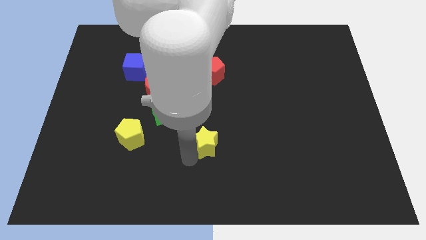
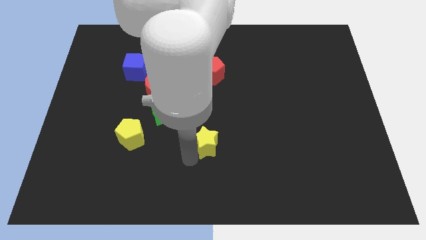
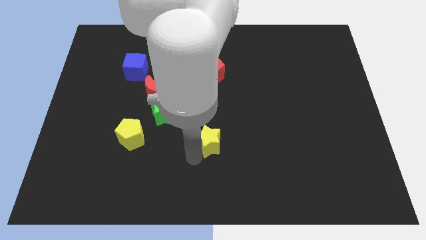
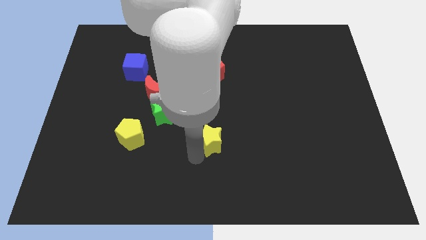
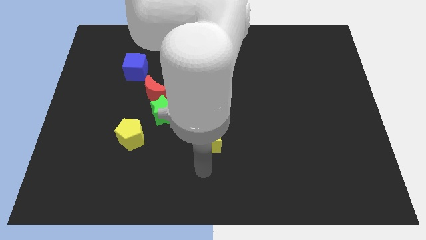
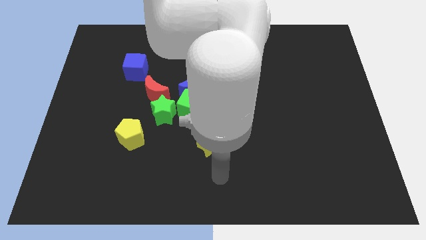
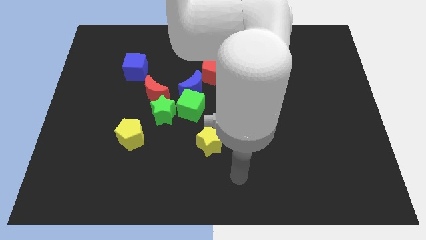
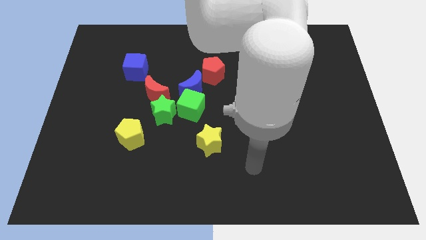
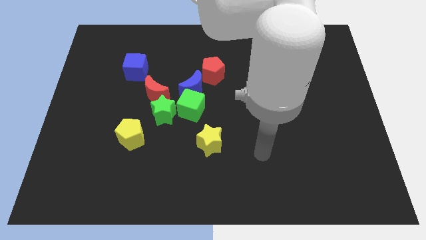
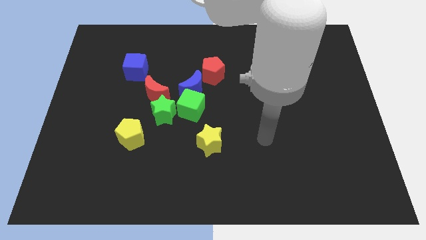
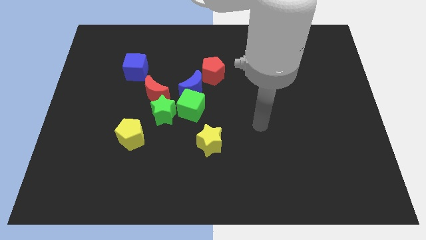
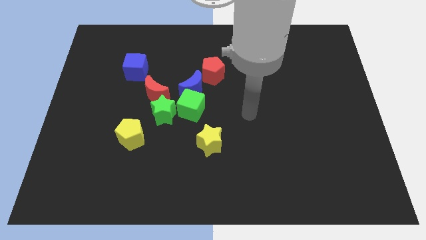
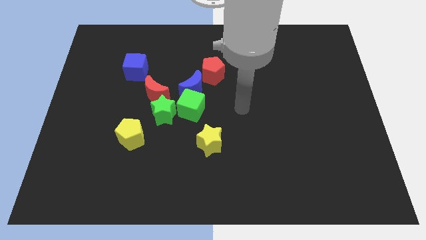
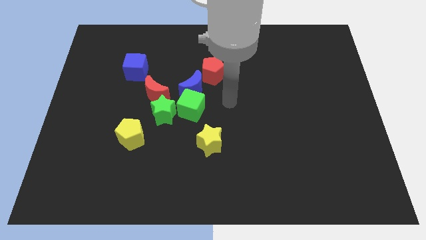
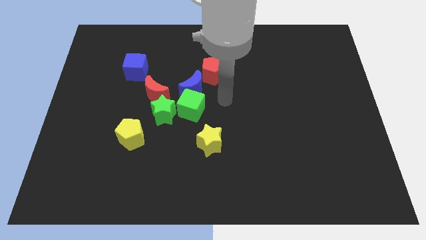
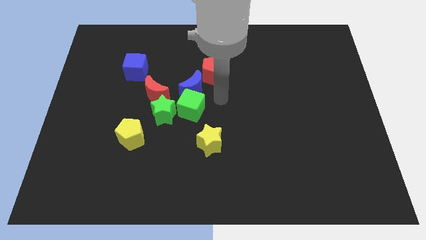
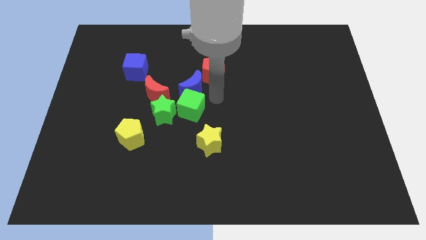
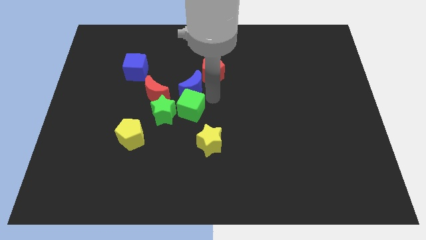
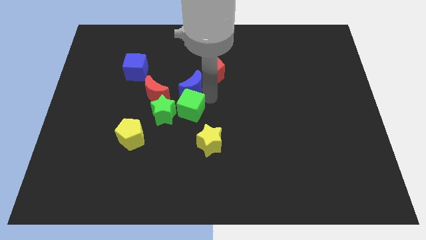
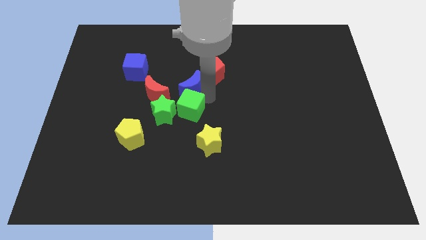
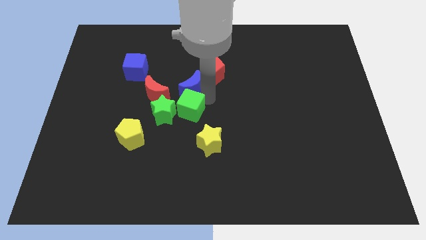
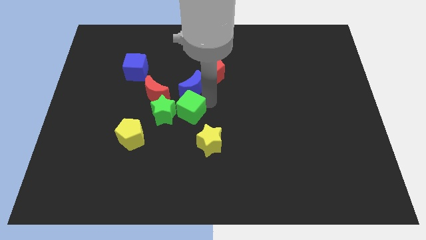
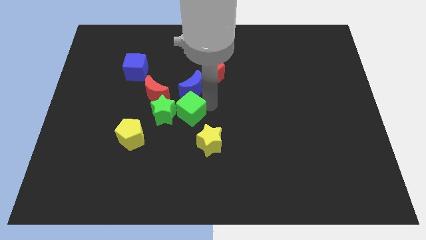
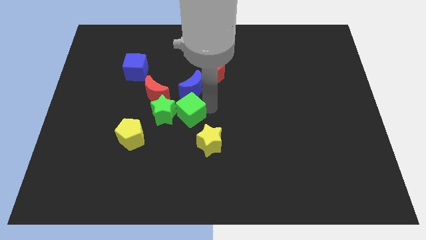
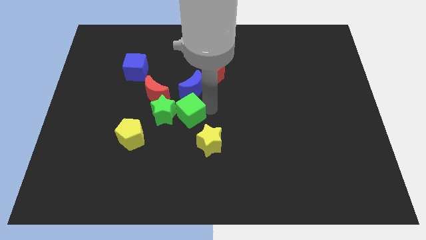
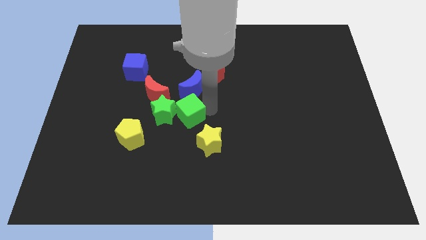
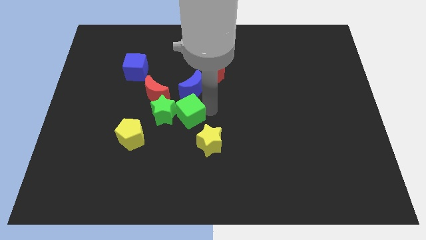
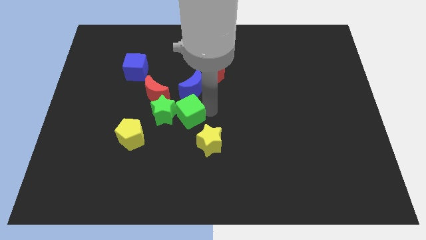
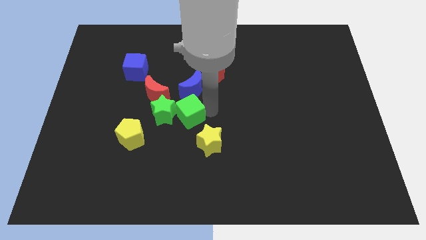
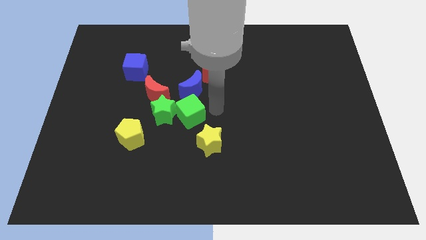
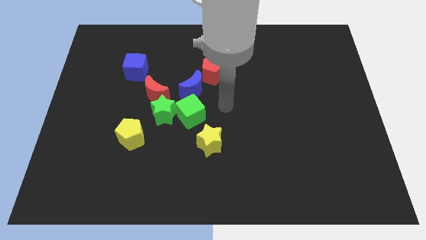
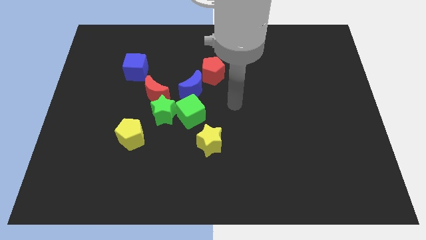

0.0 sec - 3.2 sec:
adjust the green cube at the right side of the green star

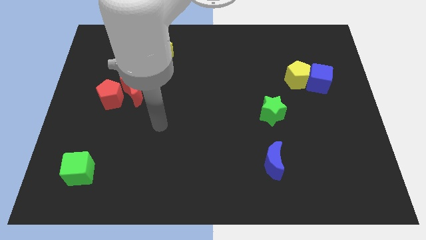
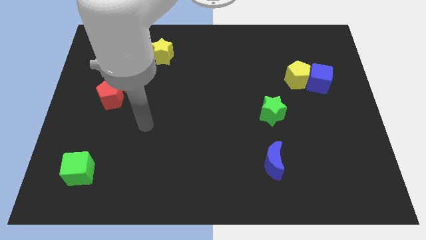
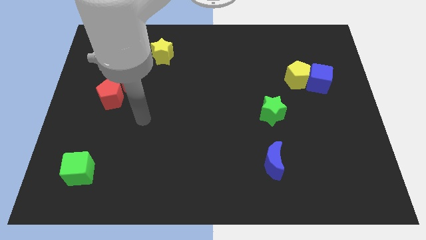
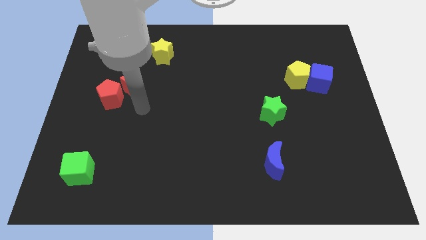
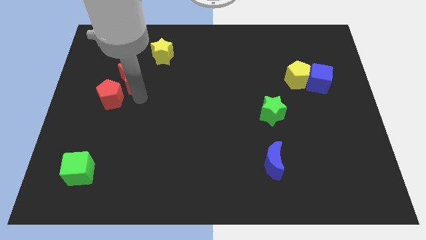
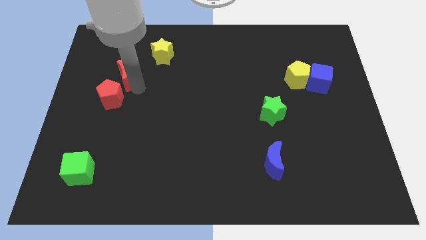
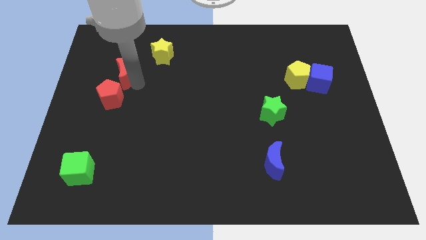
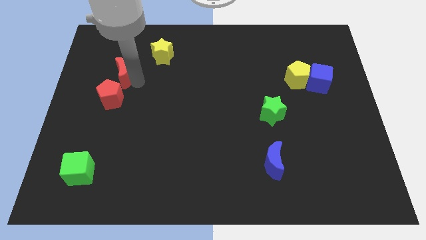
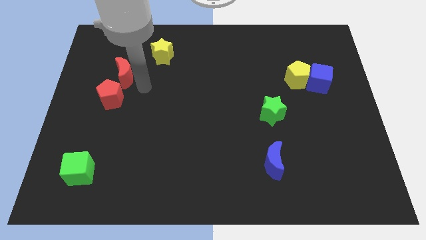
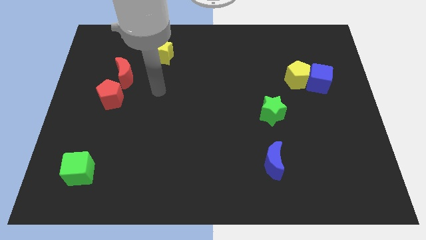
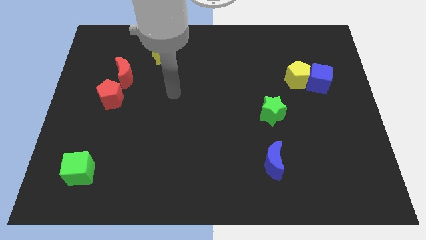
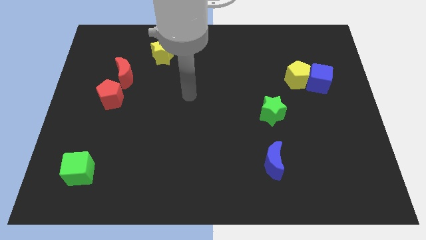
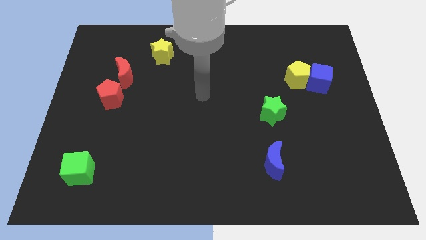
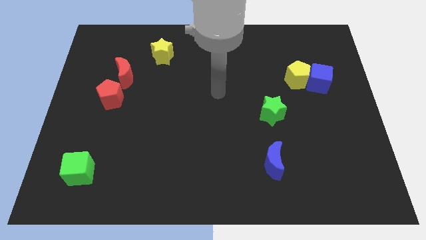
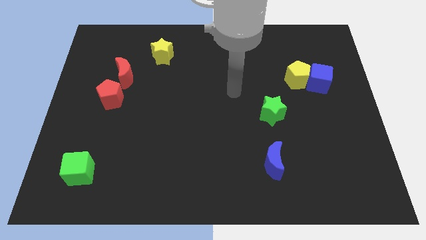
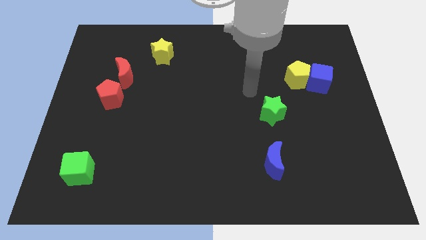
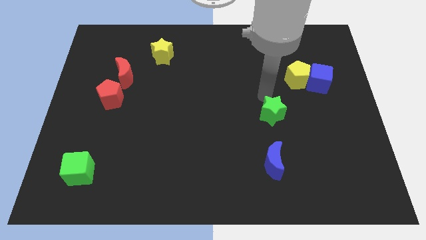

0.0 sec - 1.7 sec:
push red moon upwards a bit

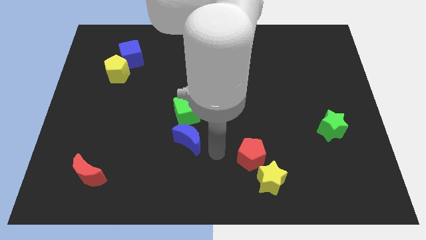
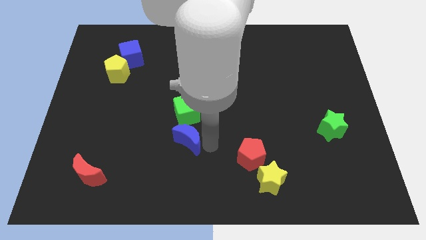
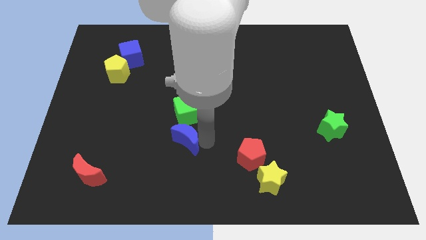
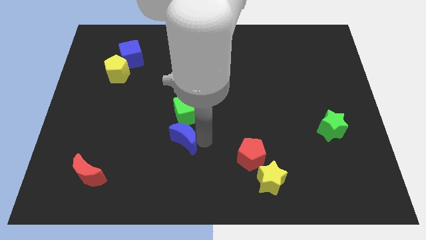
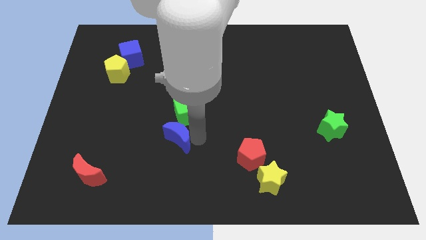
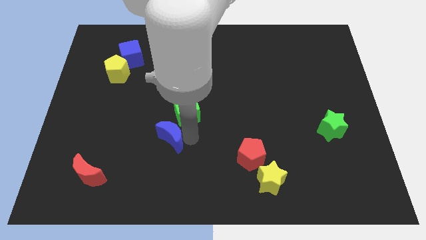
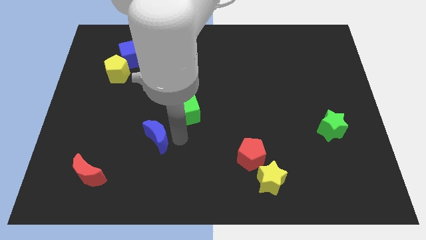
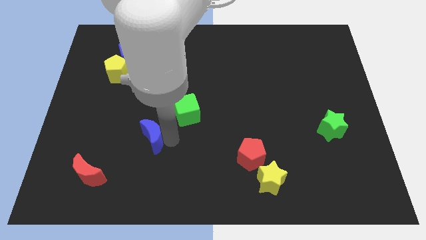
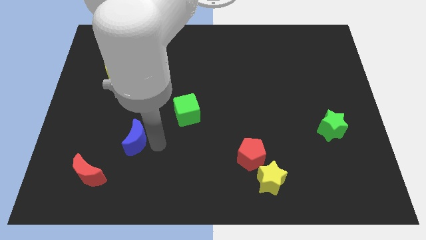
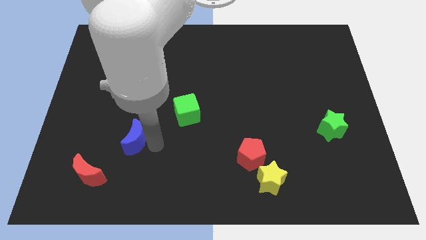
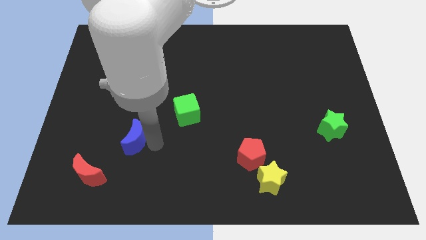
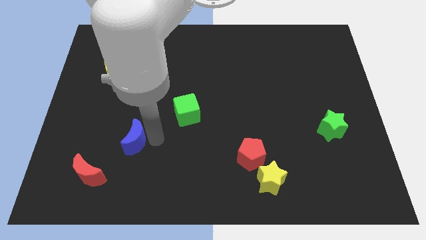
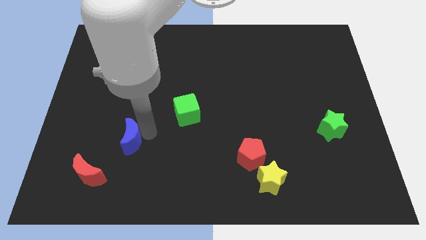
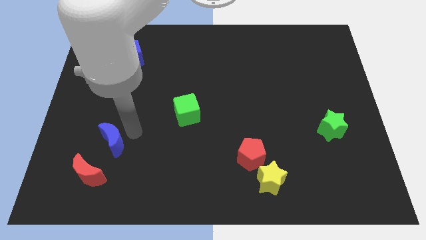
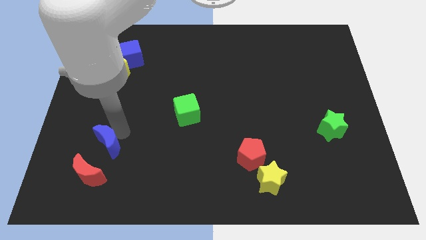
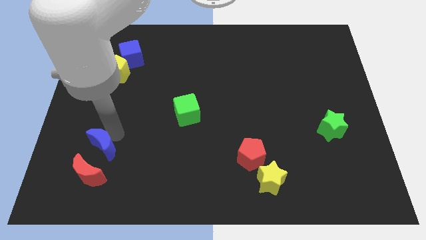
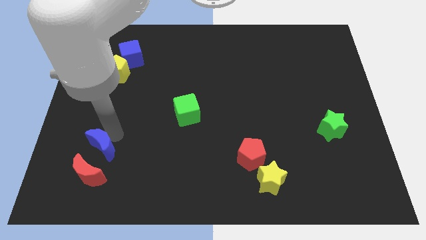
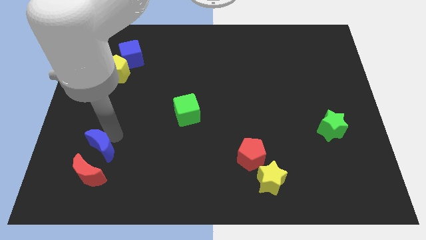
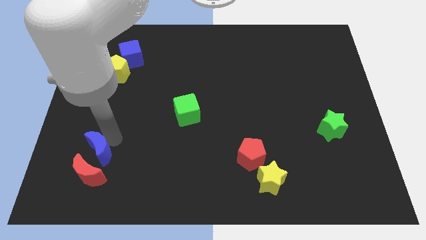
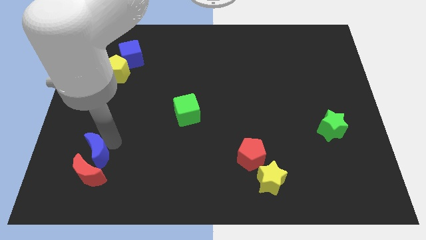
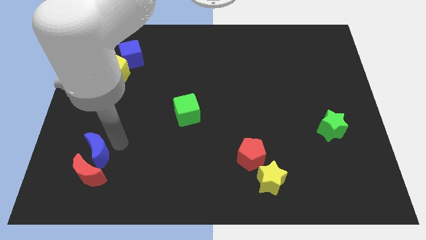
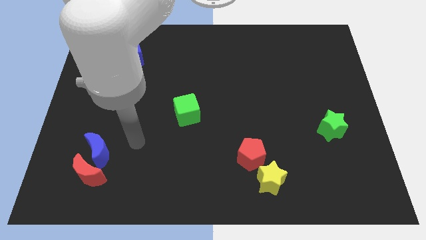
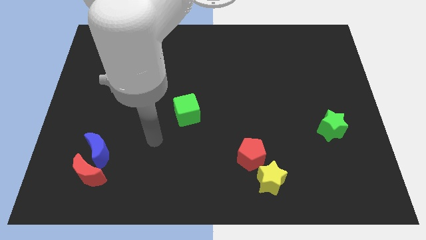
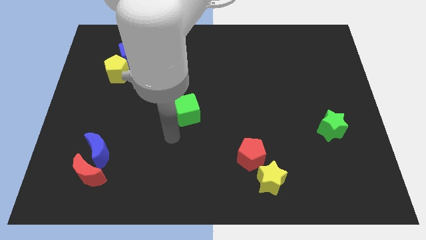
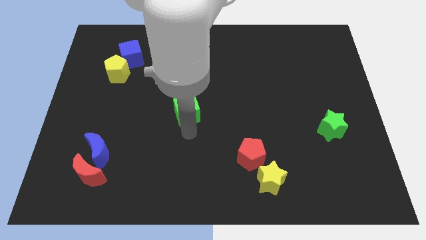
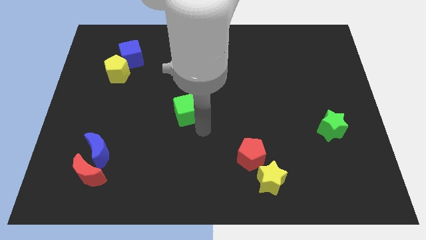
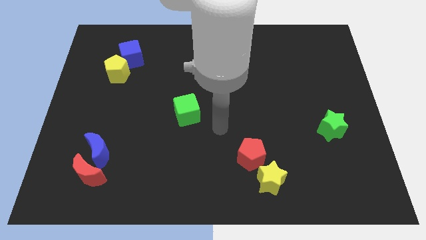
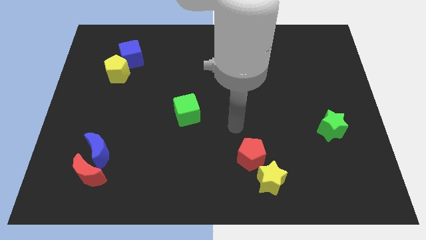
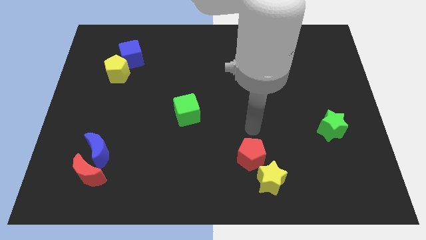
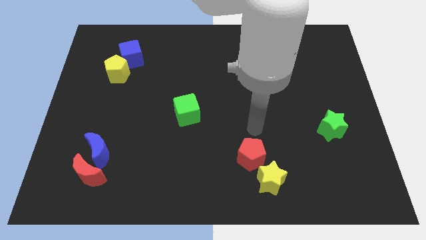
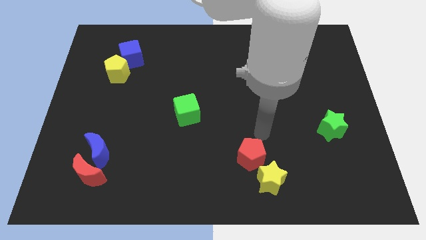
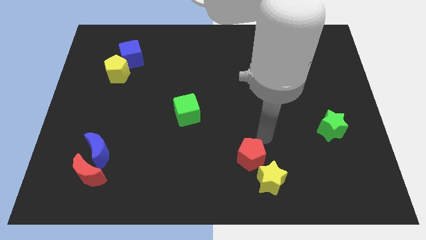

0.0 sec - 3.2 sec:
move blue moon close to red moon

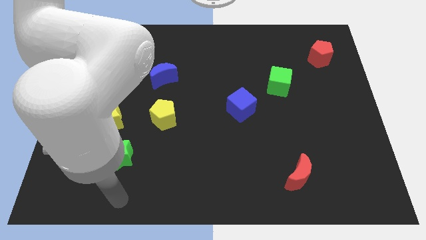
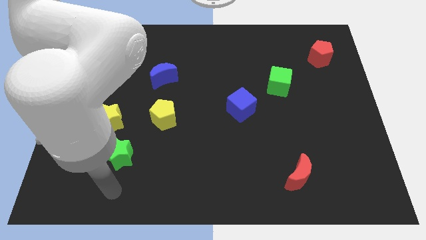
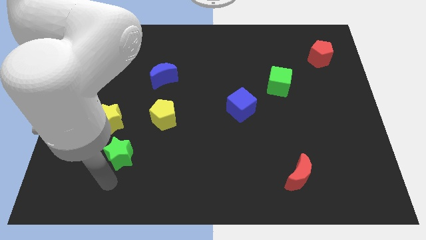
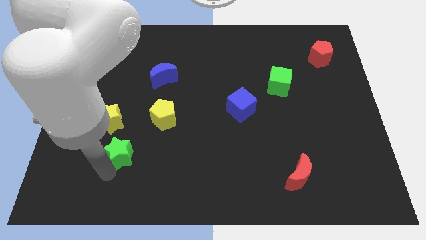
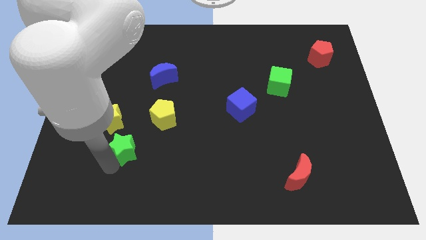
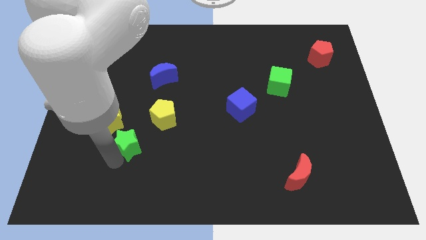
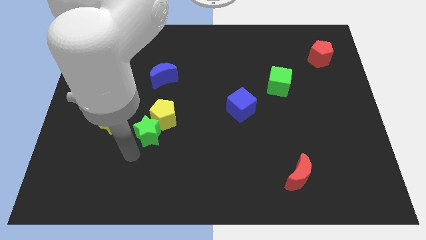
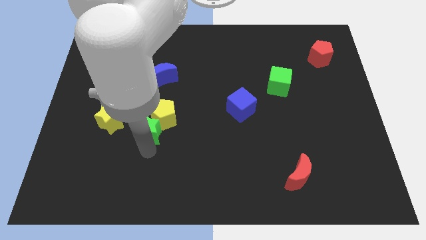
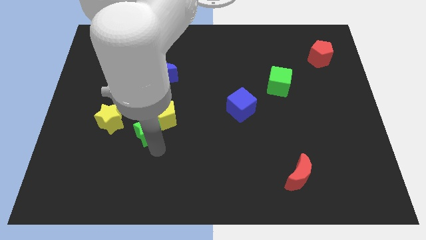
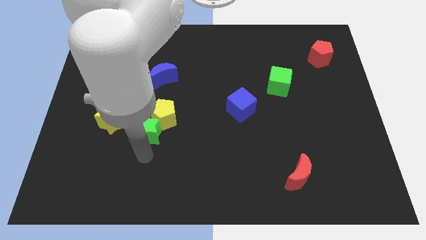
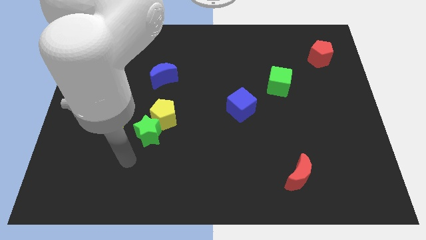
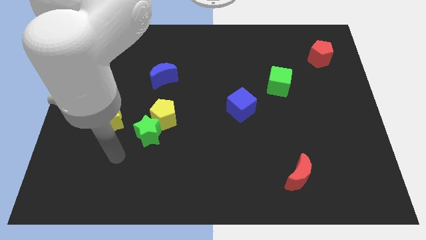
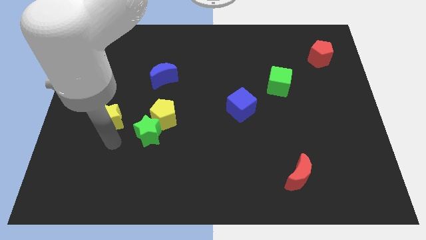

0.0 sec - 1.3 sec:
slide the green star to the bottom left side of the yellow pentagon

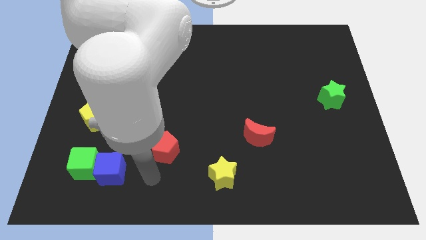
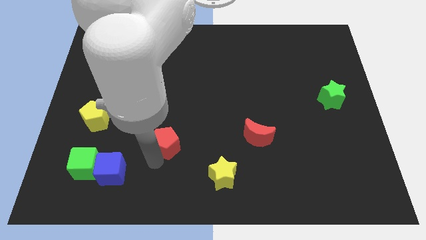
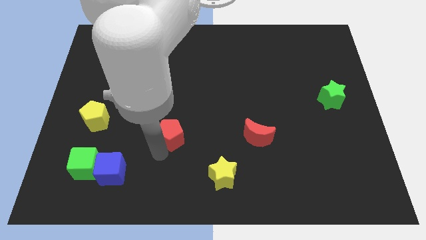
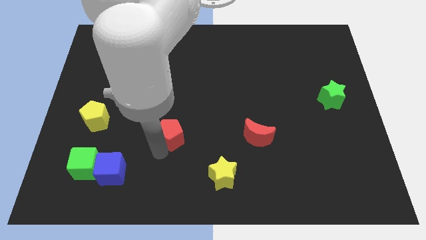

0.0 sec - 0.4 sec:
slightly move the red pentagon to the center of board
